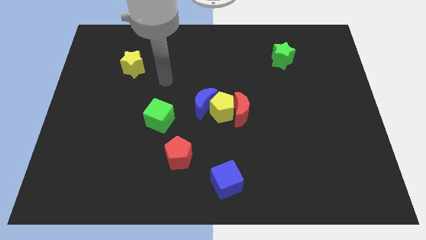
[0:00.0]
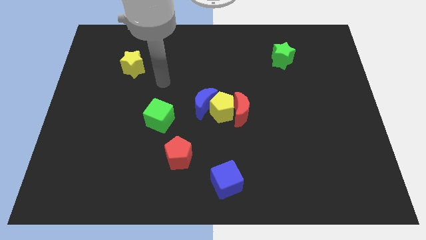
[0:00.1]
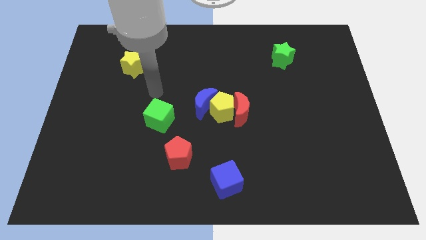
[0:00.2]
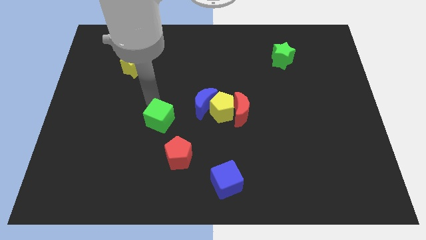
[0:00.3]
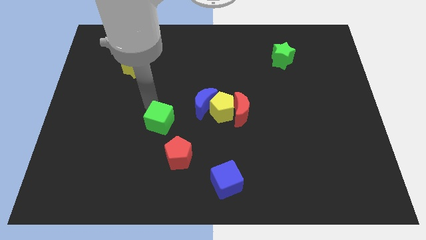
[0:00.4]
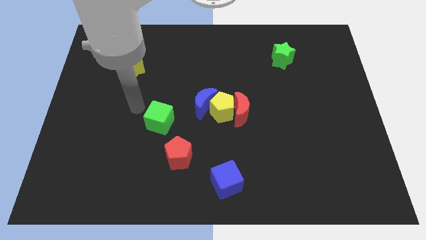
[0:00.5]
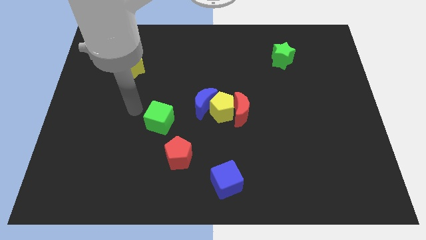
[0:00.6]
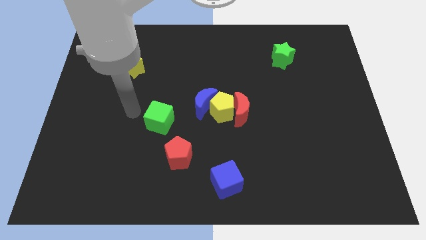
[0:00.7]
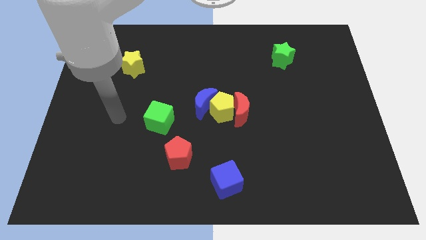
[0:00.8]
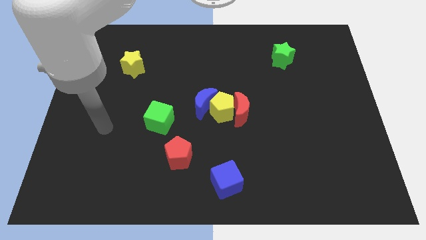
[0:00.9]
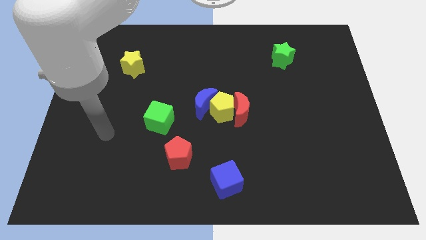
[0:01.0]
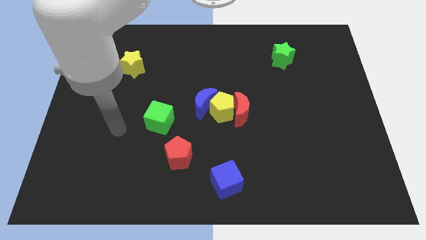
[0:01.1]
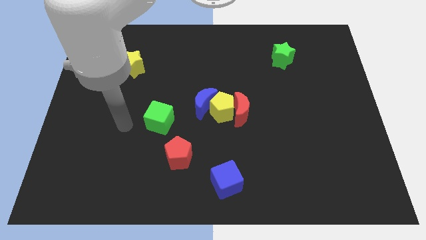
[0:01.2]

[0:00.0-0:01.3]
move the green cube slightly

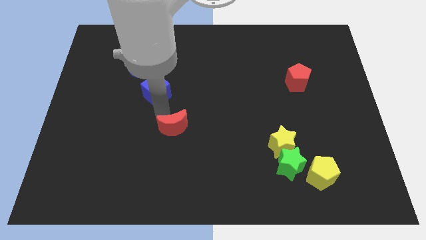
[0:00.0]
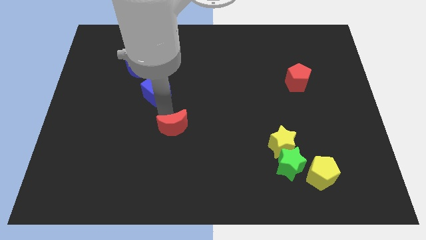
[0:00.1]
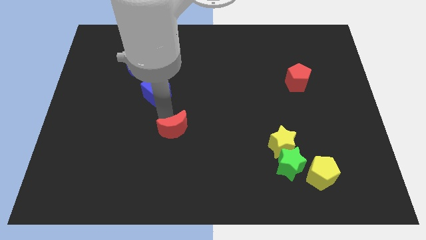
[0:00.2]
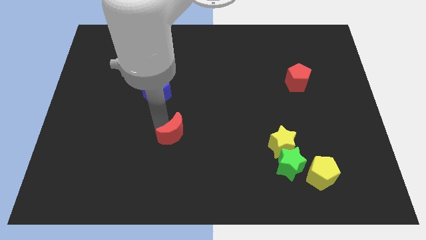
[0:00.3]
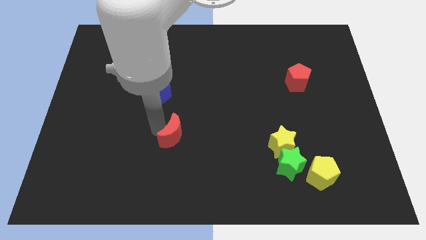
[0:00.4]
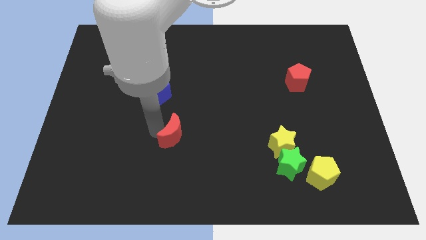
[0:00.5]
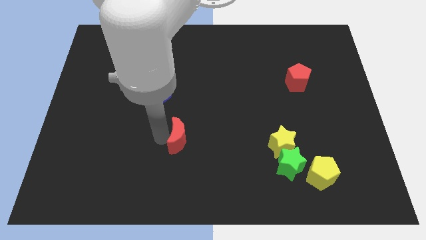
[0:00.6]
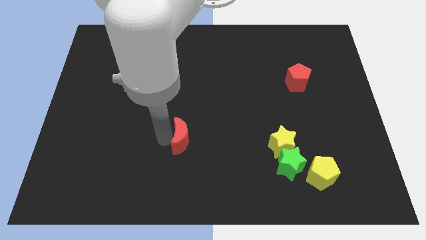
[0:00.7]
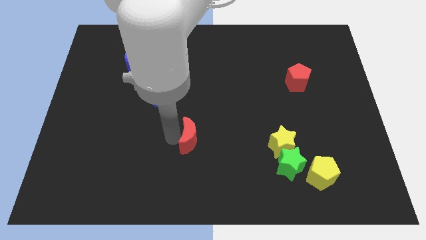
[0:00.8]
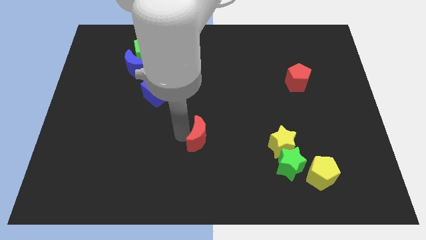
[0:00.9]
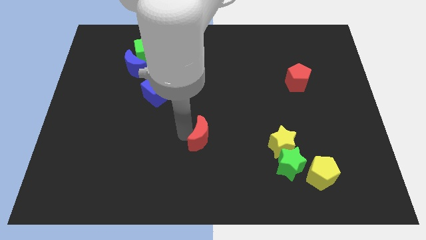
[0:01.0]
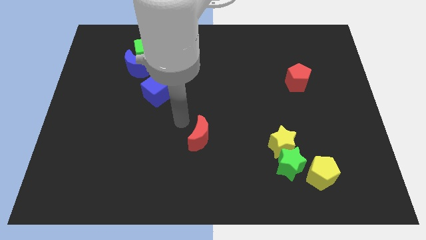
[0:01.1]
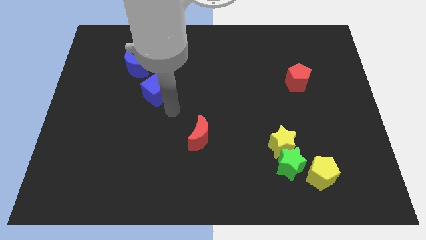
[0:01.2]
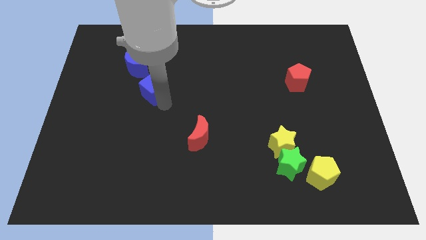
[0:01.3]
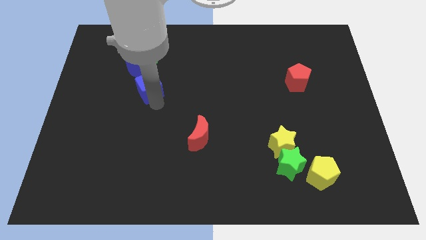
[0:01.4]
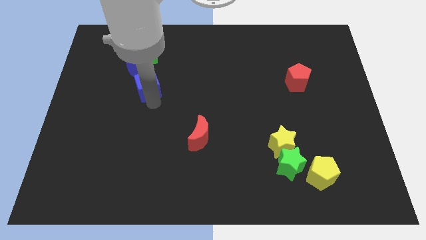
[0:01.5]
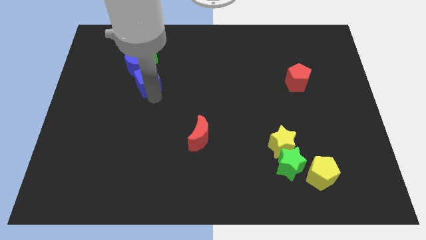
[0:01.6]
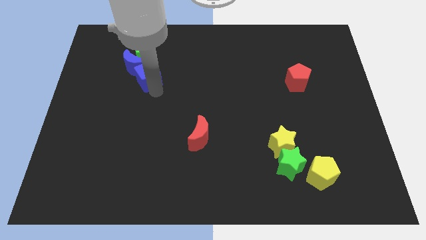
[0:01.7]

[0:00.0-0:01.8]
push red moon towards right side of the board

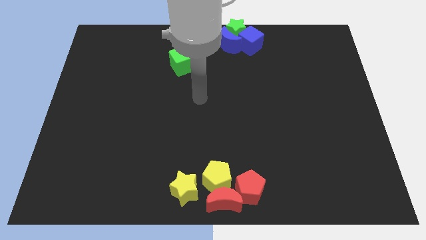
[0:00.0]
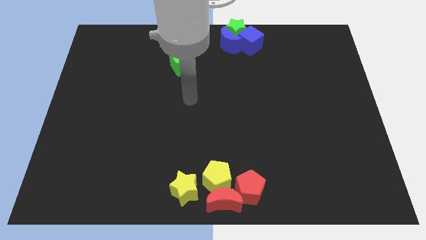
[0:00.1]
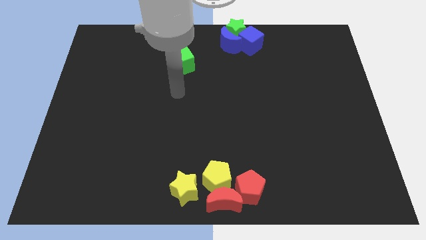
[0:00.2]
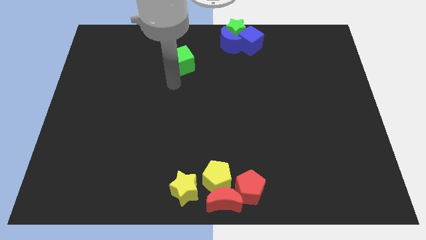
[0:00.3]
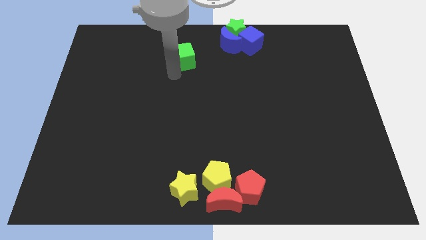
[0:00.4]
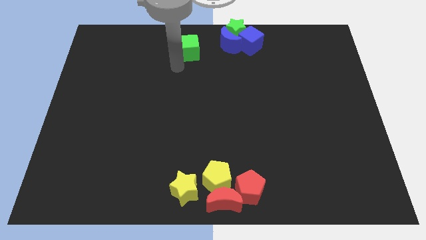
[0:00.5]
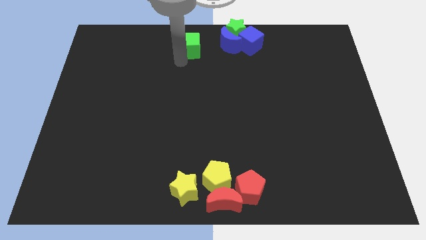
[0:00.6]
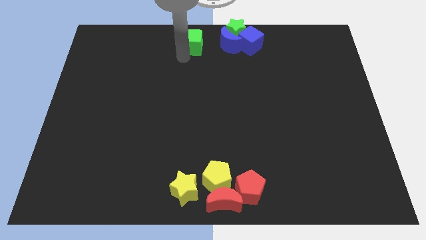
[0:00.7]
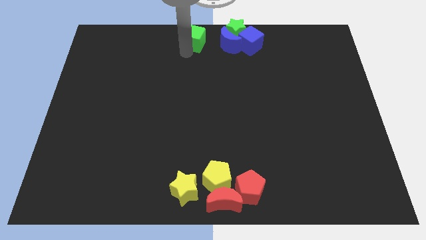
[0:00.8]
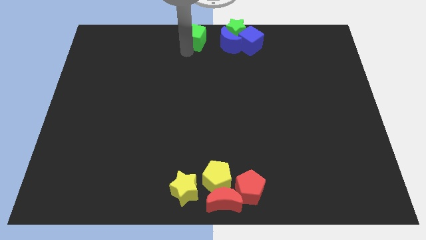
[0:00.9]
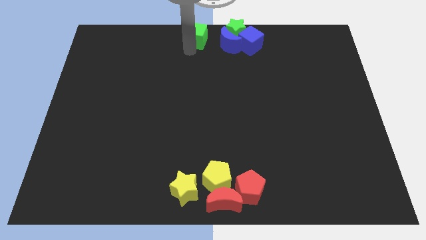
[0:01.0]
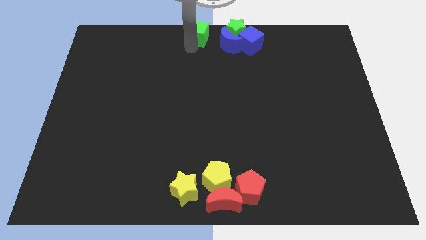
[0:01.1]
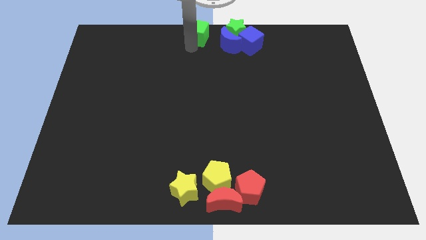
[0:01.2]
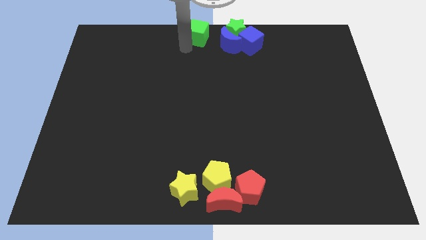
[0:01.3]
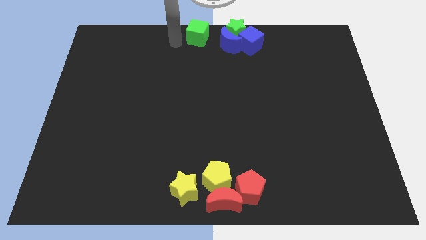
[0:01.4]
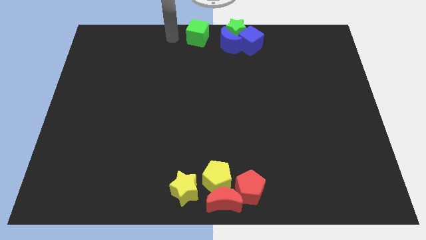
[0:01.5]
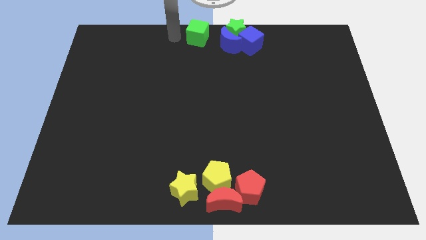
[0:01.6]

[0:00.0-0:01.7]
place the green cube to the top center

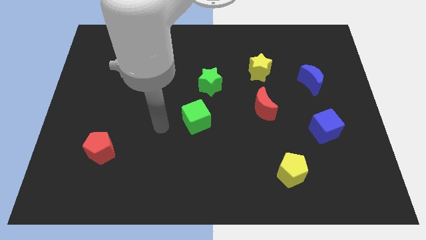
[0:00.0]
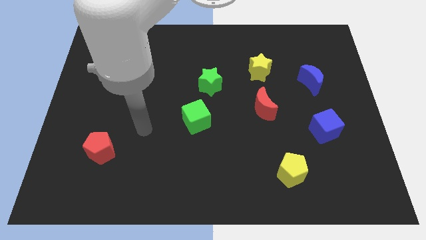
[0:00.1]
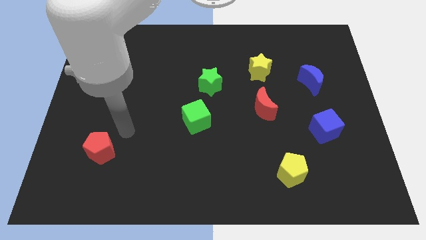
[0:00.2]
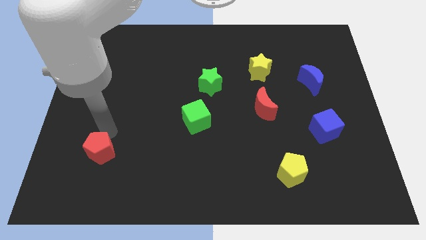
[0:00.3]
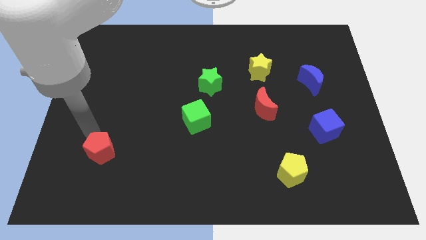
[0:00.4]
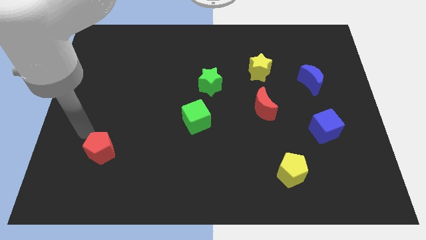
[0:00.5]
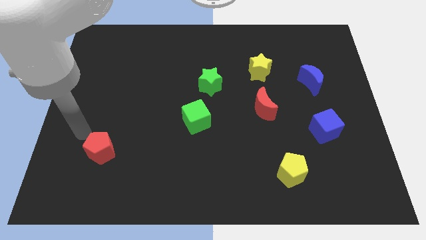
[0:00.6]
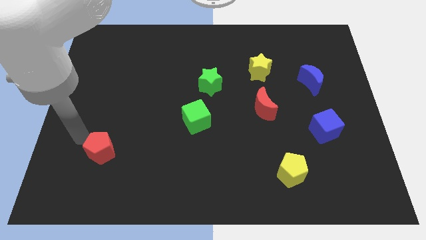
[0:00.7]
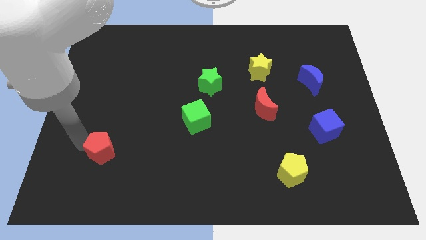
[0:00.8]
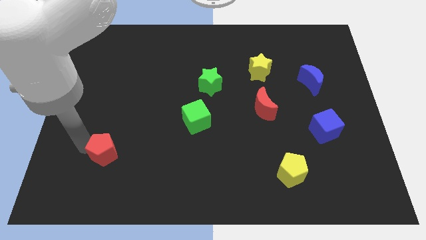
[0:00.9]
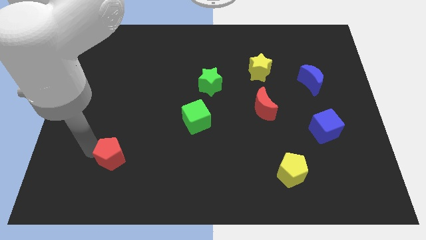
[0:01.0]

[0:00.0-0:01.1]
slightly push the red pentagon towards bottom side

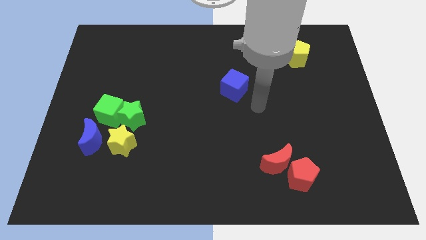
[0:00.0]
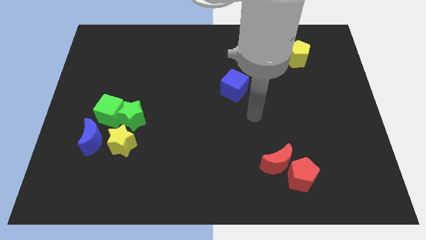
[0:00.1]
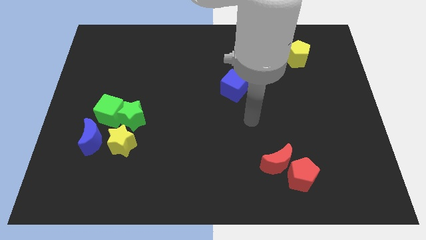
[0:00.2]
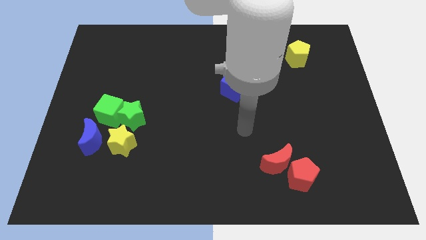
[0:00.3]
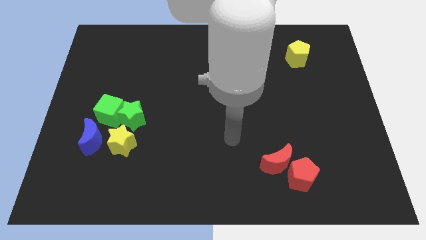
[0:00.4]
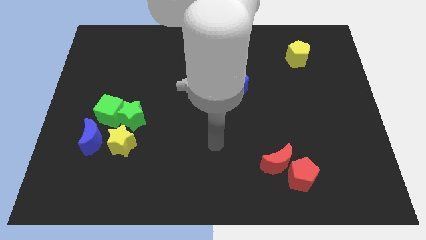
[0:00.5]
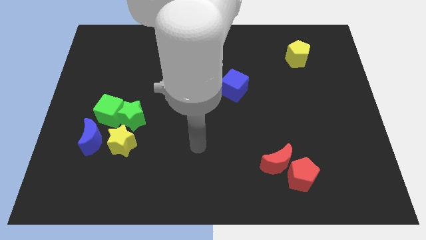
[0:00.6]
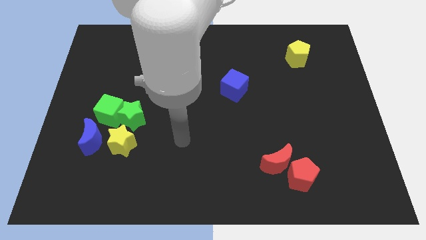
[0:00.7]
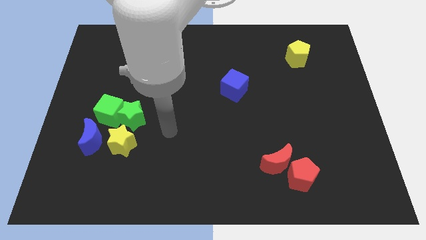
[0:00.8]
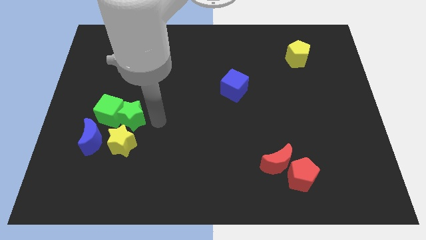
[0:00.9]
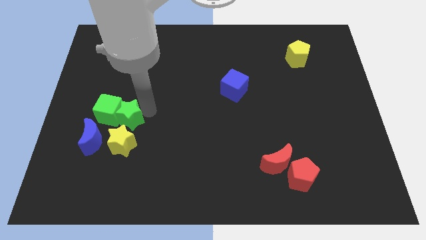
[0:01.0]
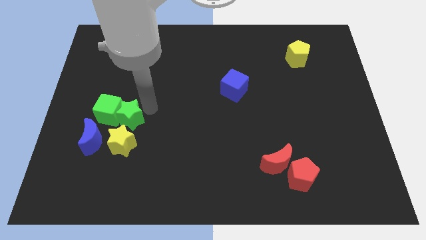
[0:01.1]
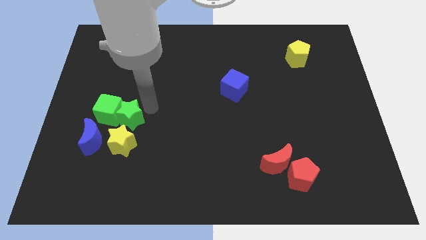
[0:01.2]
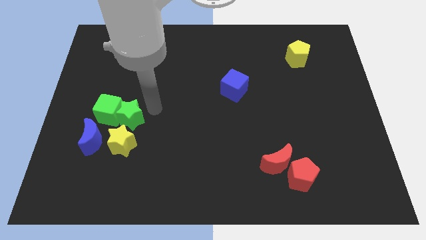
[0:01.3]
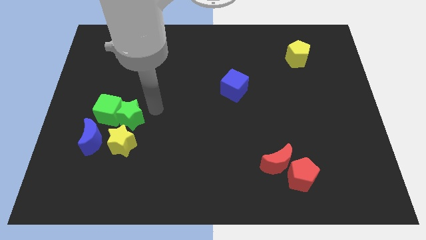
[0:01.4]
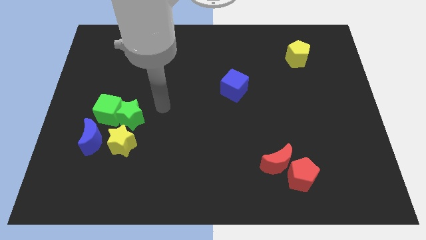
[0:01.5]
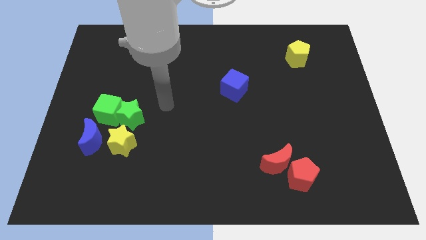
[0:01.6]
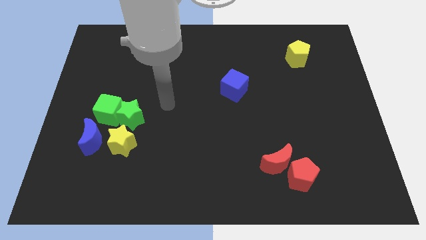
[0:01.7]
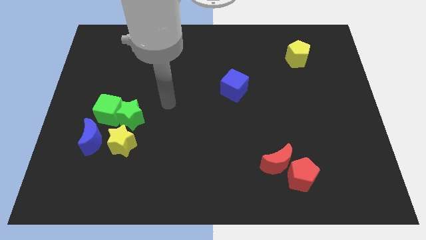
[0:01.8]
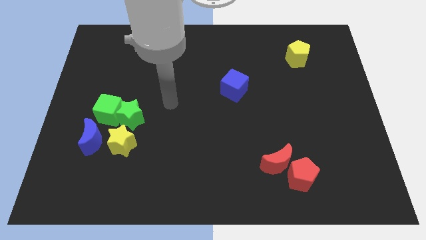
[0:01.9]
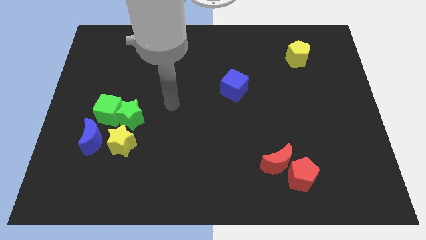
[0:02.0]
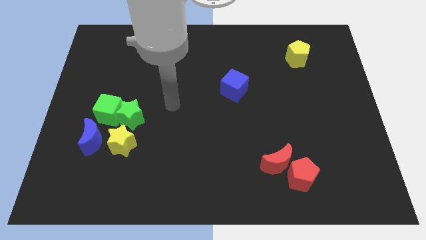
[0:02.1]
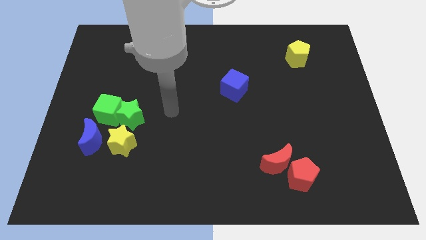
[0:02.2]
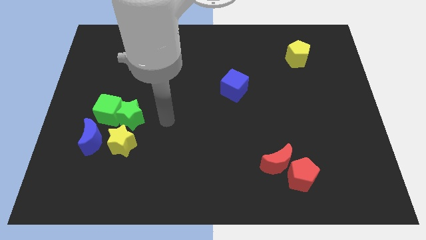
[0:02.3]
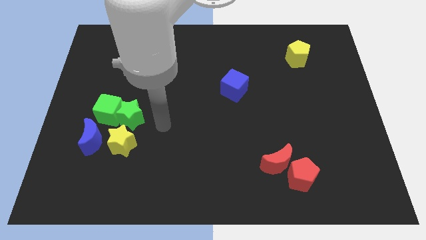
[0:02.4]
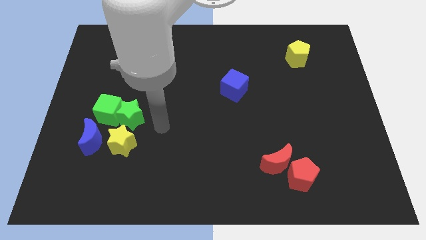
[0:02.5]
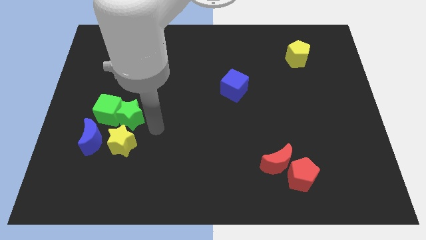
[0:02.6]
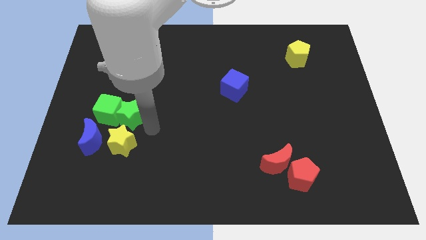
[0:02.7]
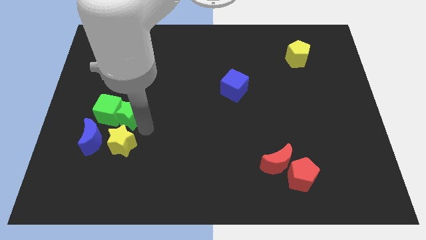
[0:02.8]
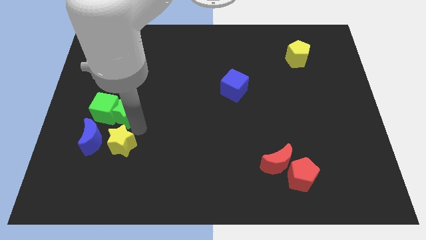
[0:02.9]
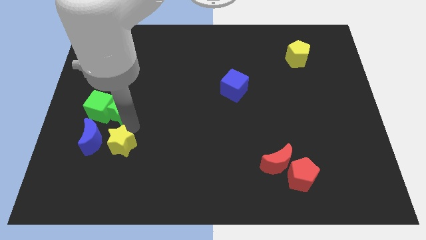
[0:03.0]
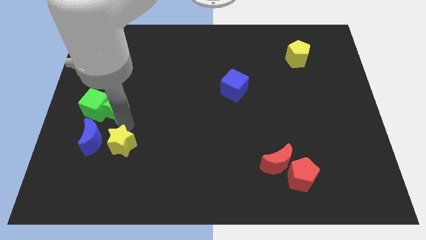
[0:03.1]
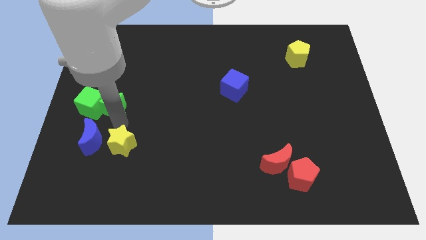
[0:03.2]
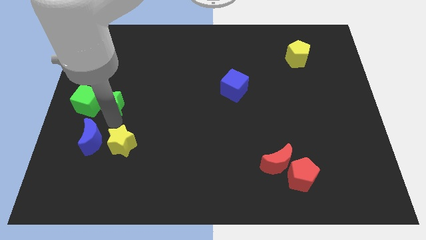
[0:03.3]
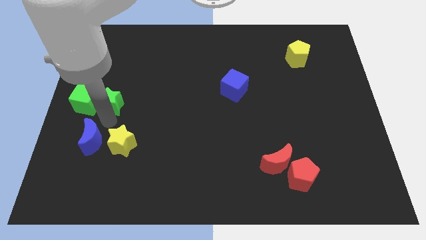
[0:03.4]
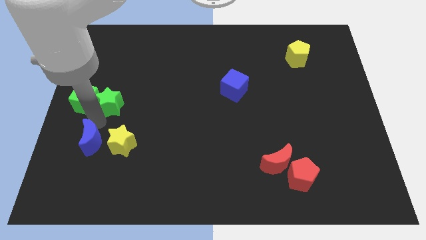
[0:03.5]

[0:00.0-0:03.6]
push the green cube and green star to the left side of the board
